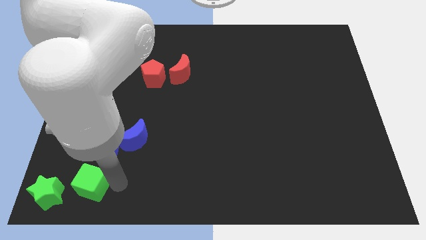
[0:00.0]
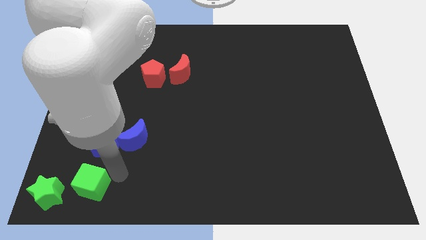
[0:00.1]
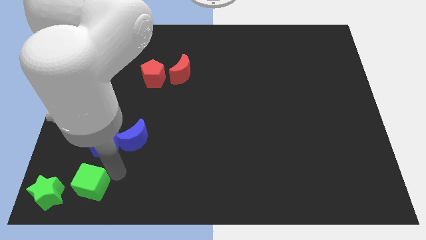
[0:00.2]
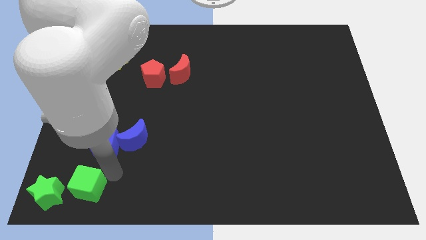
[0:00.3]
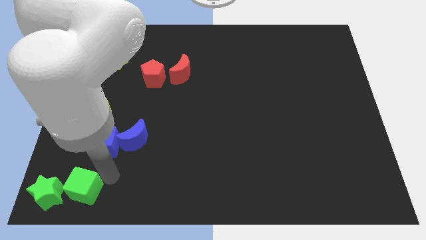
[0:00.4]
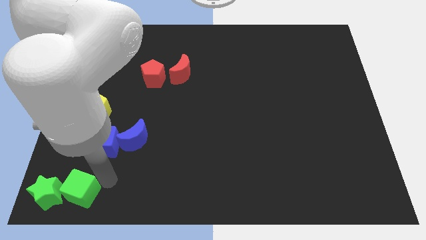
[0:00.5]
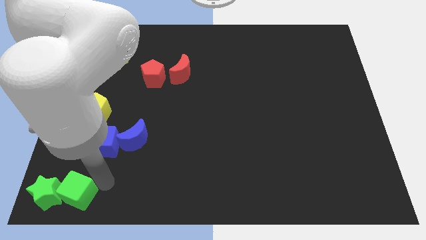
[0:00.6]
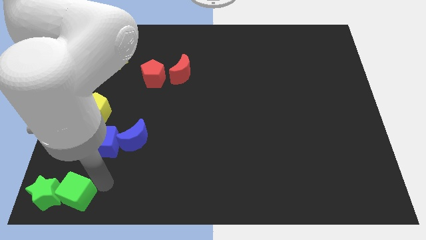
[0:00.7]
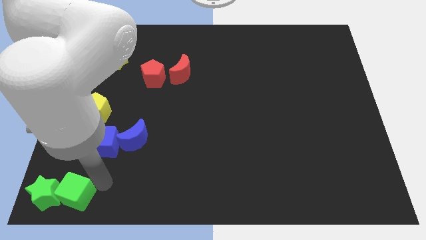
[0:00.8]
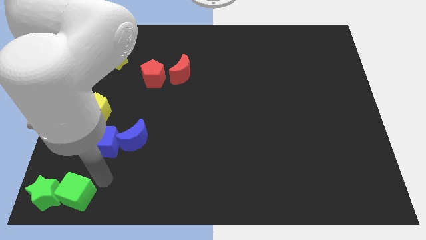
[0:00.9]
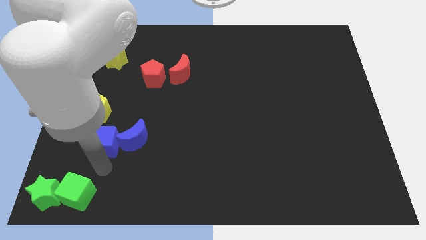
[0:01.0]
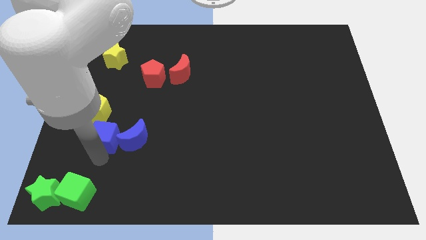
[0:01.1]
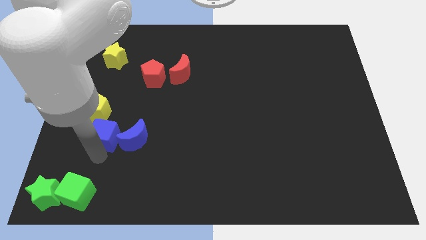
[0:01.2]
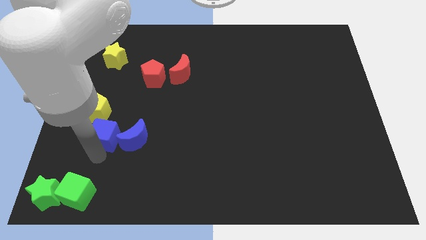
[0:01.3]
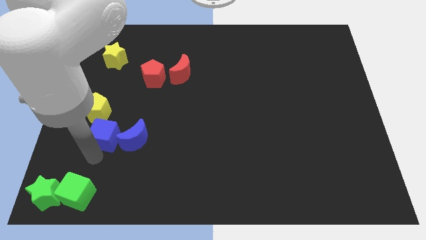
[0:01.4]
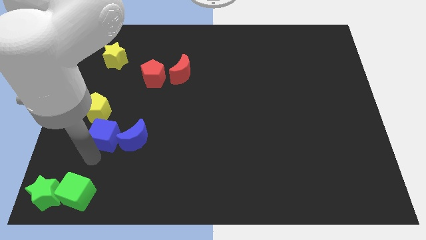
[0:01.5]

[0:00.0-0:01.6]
push the green cube into the green star

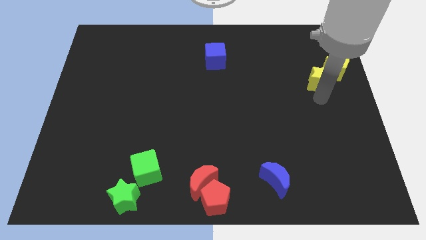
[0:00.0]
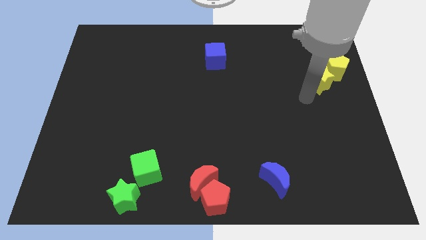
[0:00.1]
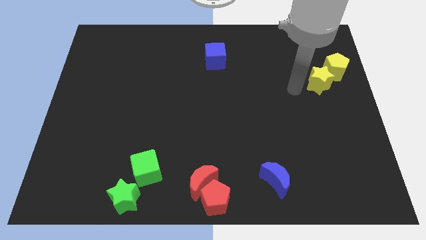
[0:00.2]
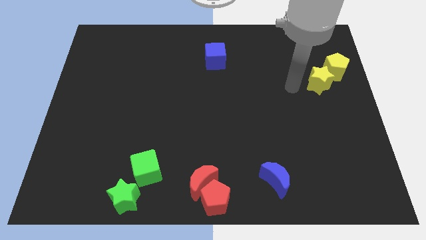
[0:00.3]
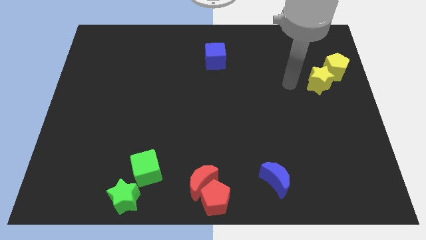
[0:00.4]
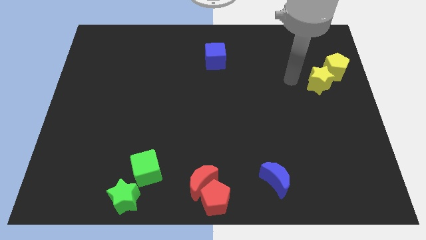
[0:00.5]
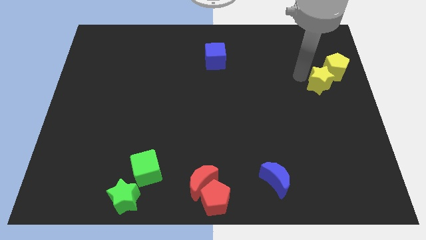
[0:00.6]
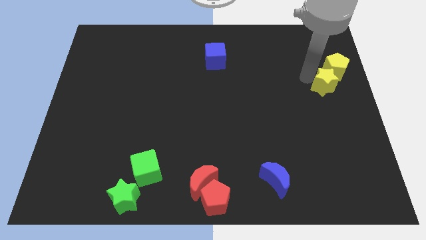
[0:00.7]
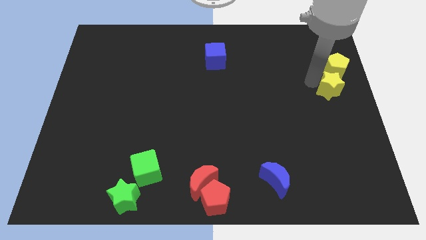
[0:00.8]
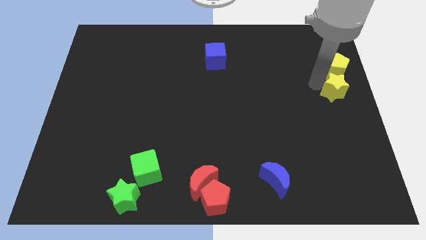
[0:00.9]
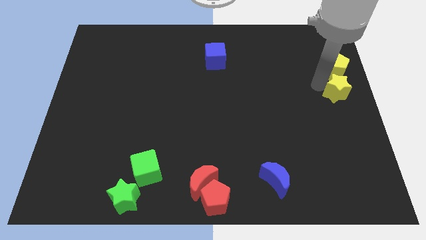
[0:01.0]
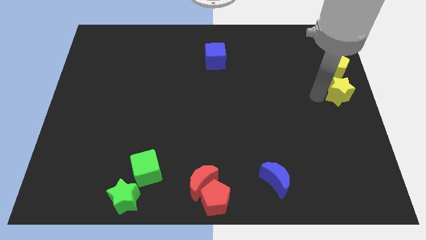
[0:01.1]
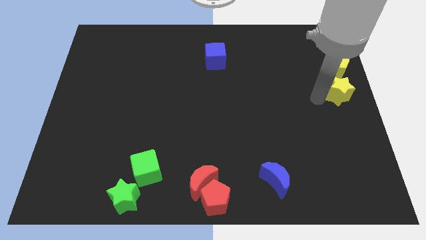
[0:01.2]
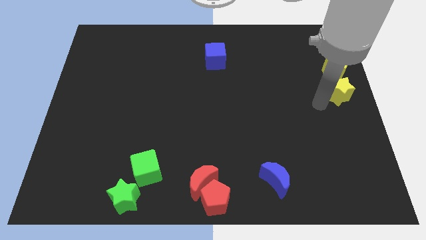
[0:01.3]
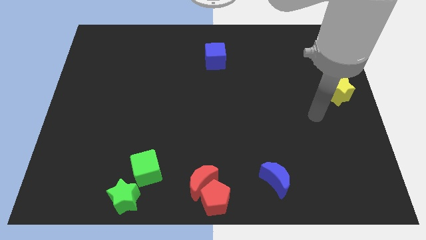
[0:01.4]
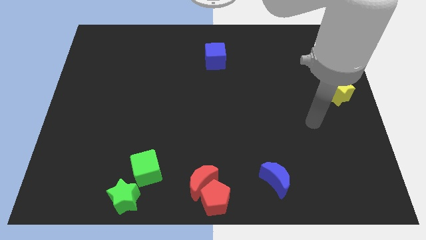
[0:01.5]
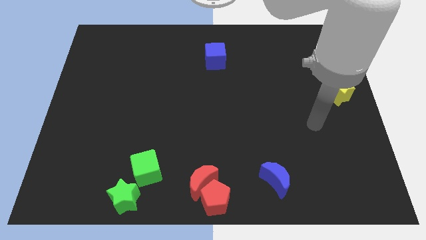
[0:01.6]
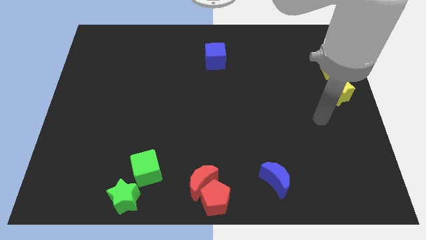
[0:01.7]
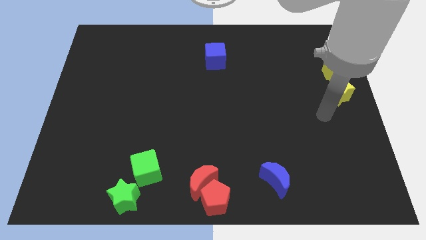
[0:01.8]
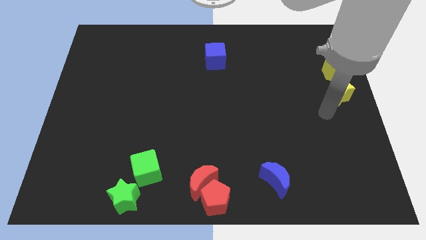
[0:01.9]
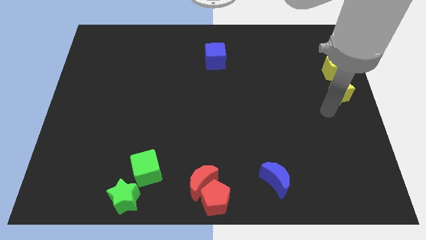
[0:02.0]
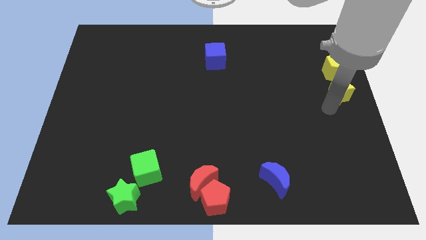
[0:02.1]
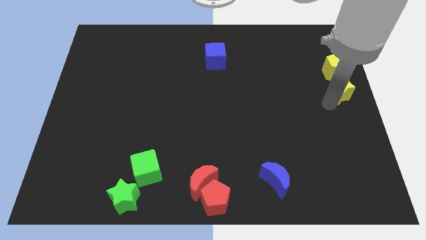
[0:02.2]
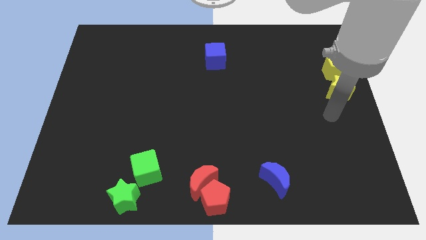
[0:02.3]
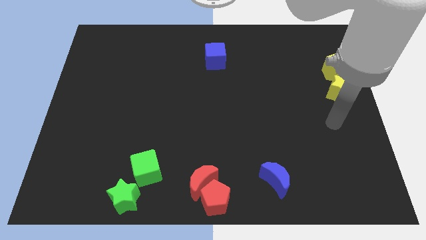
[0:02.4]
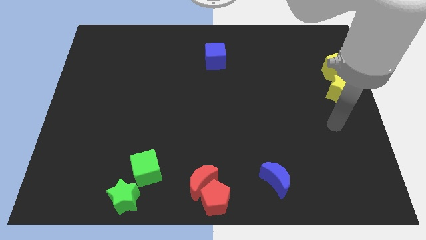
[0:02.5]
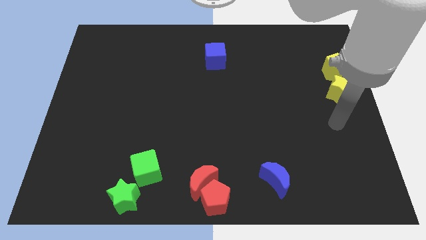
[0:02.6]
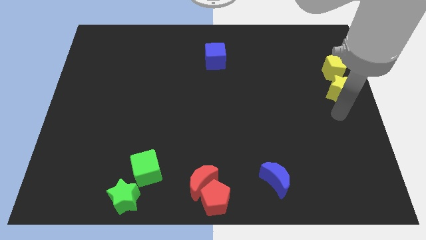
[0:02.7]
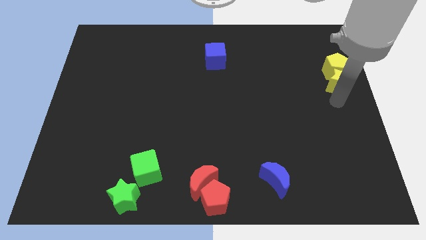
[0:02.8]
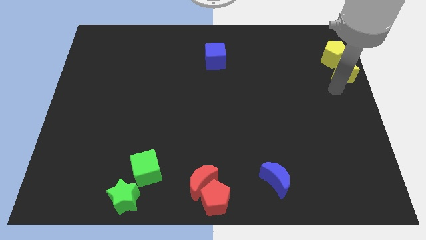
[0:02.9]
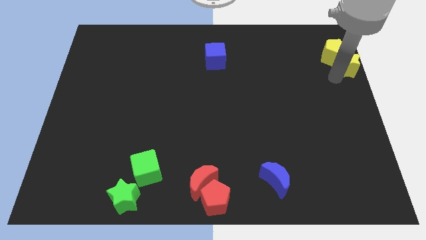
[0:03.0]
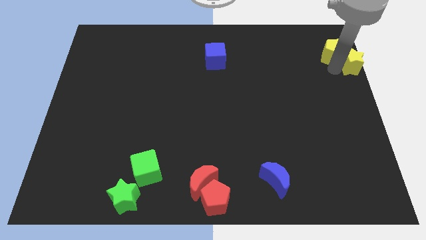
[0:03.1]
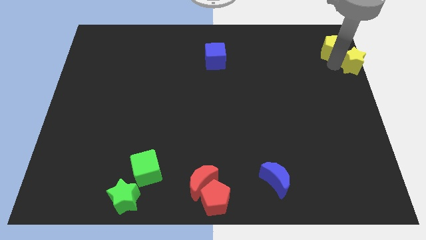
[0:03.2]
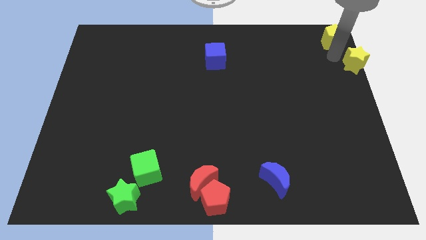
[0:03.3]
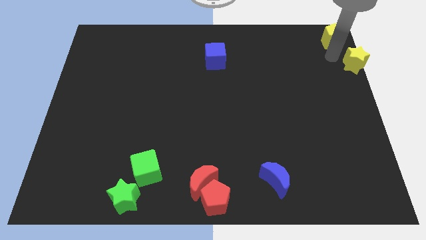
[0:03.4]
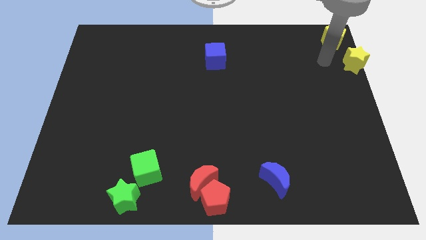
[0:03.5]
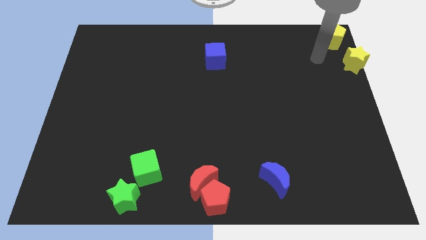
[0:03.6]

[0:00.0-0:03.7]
push the yellow star to the bottom right side of the yellow pentagon

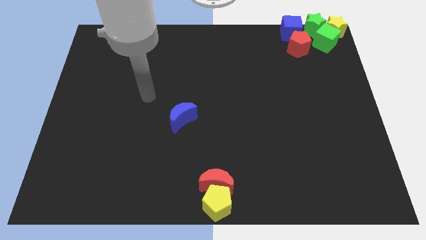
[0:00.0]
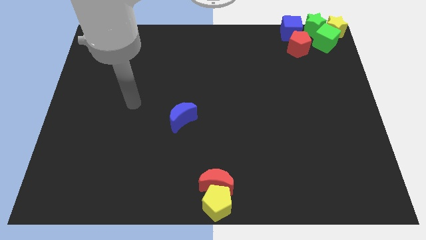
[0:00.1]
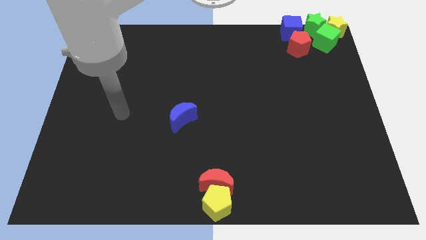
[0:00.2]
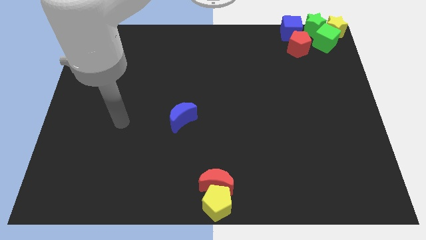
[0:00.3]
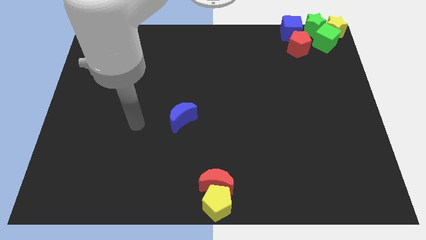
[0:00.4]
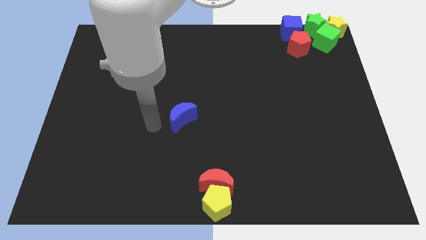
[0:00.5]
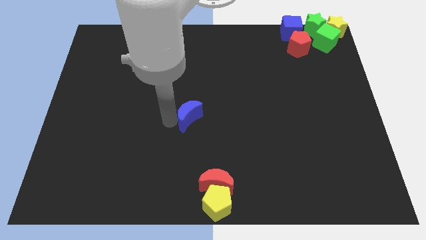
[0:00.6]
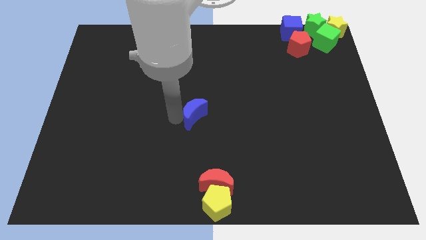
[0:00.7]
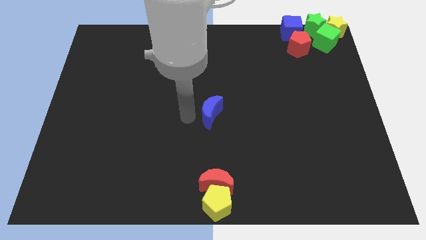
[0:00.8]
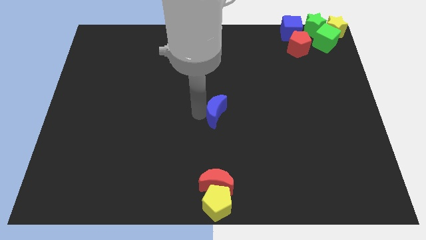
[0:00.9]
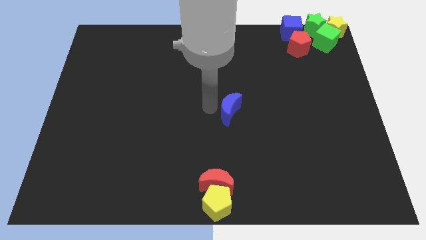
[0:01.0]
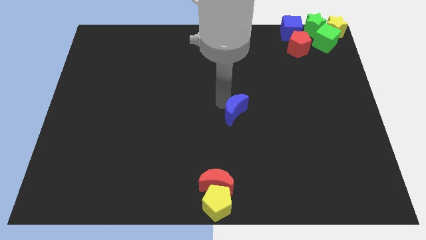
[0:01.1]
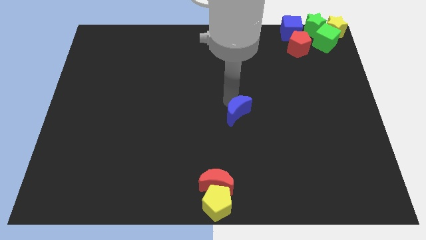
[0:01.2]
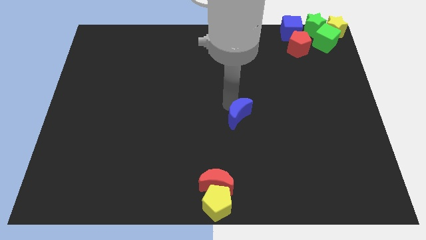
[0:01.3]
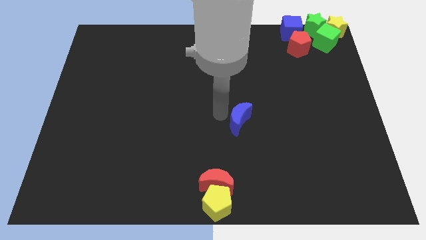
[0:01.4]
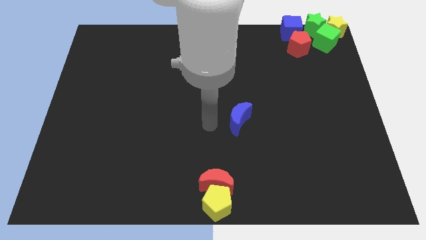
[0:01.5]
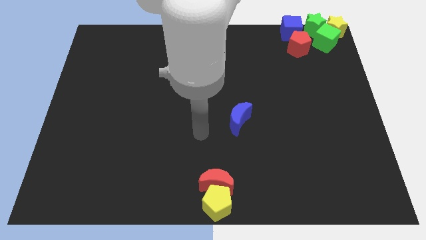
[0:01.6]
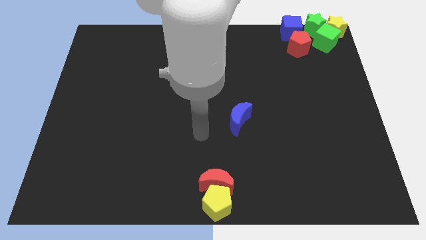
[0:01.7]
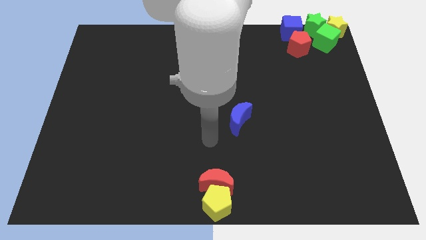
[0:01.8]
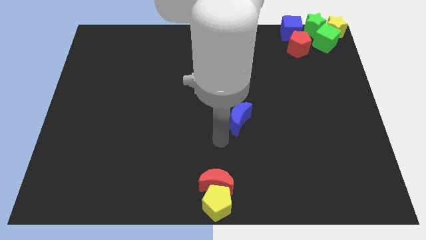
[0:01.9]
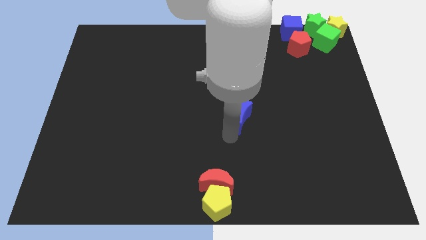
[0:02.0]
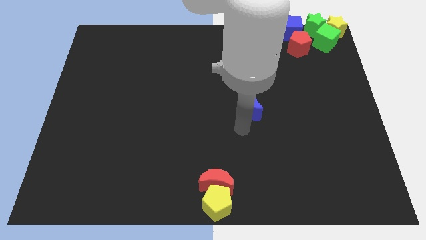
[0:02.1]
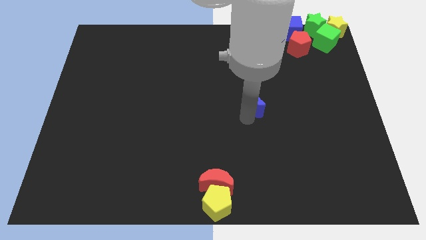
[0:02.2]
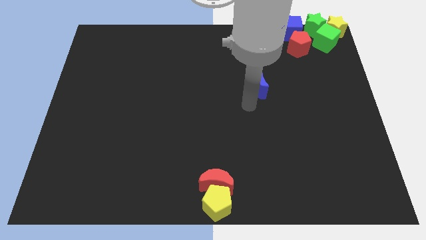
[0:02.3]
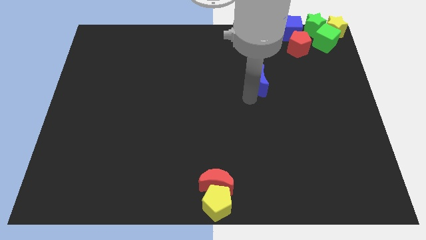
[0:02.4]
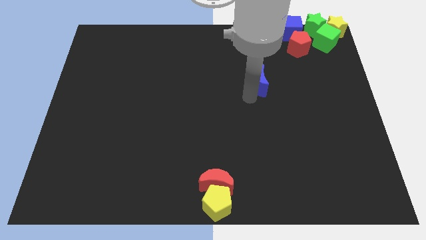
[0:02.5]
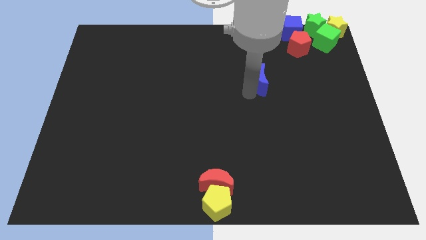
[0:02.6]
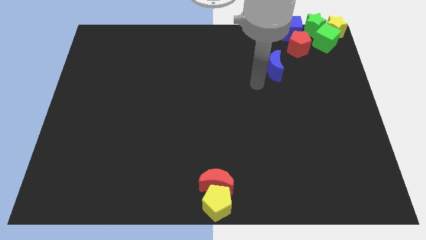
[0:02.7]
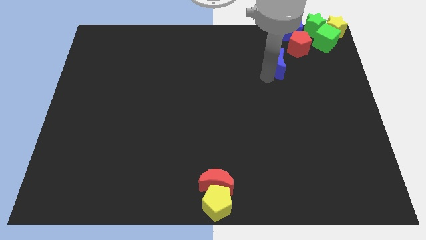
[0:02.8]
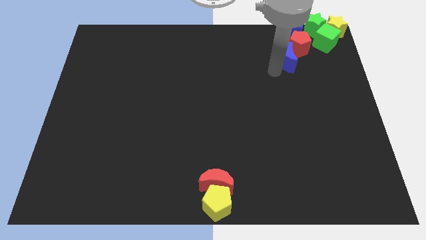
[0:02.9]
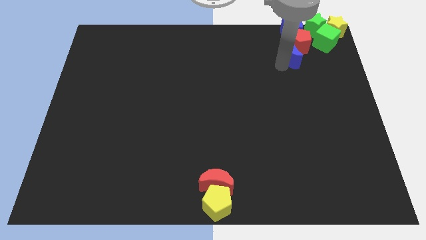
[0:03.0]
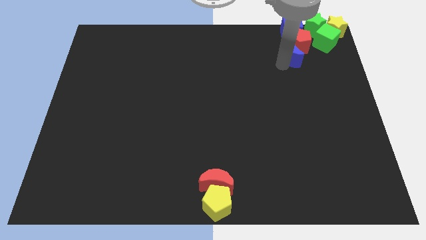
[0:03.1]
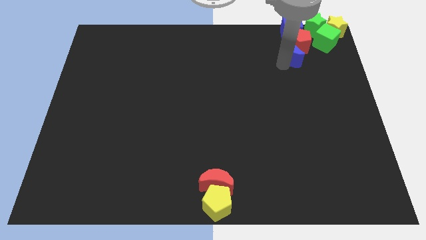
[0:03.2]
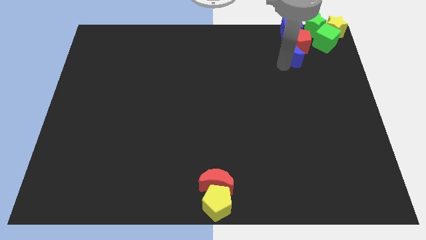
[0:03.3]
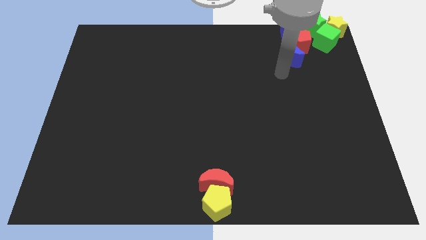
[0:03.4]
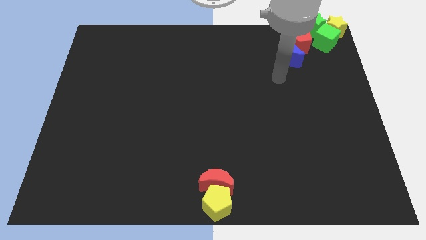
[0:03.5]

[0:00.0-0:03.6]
push the blue moon into the red pentagon
